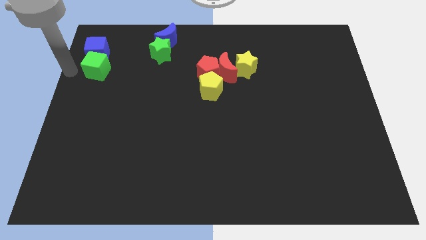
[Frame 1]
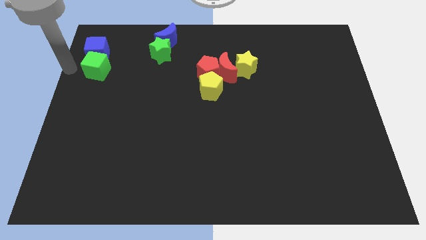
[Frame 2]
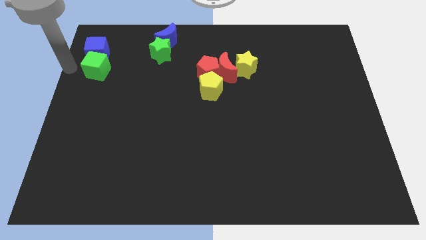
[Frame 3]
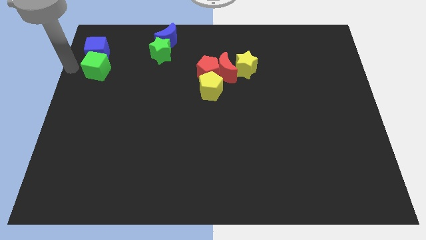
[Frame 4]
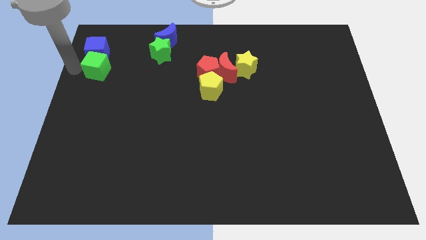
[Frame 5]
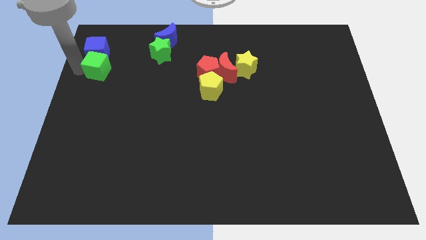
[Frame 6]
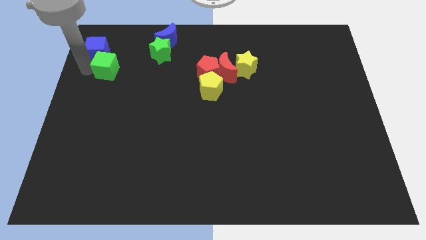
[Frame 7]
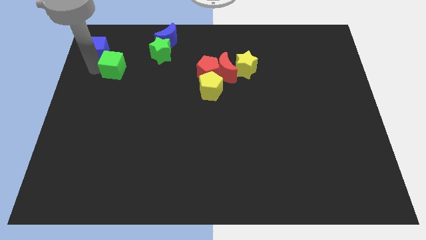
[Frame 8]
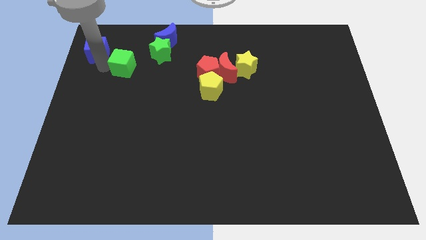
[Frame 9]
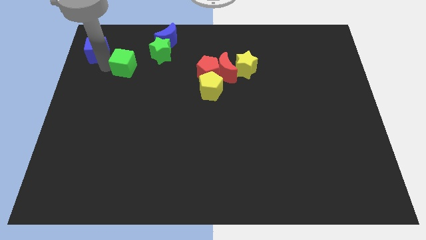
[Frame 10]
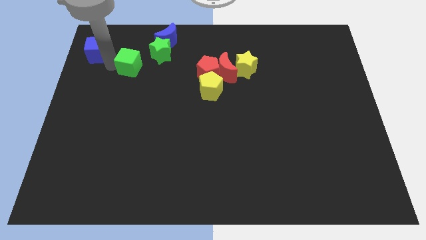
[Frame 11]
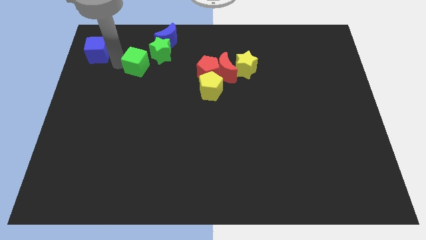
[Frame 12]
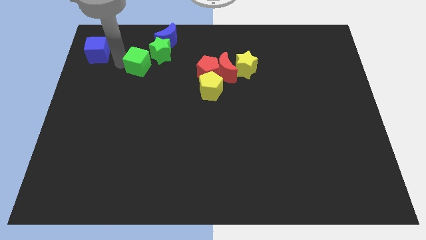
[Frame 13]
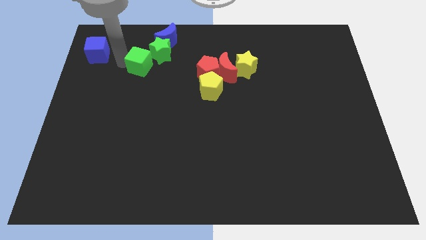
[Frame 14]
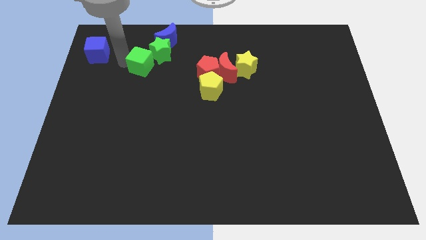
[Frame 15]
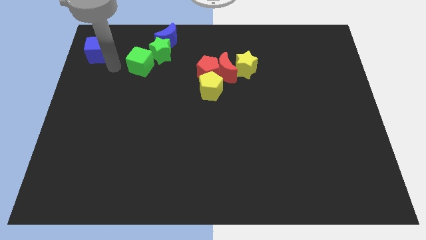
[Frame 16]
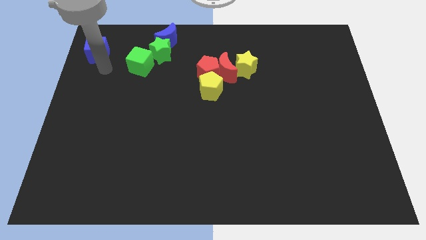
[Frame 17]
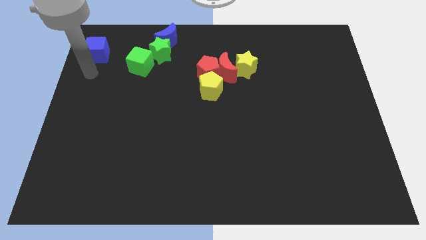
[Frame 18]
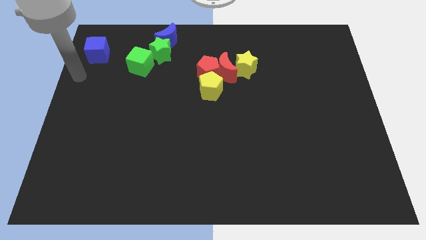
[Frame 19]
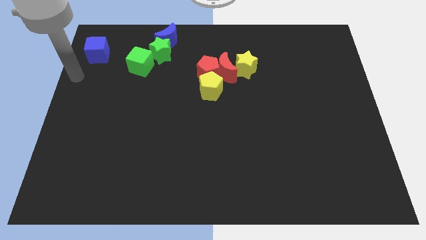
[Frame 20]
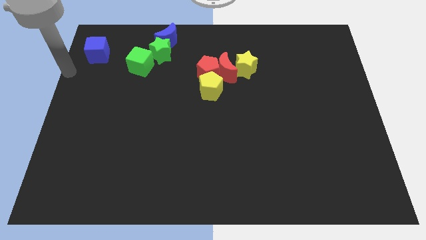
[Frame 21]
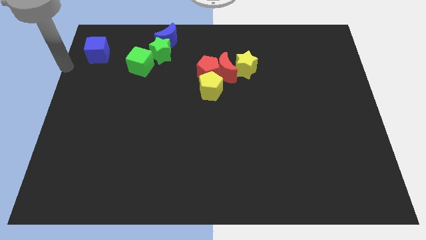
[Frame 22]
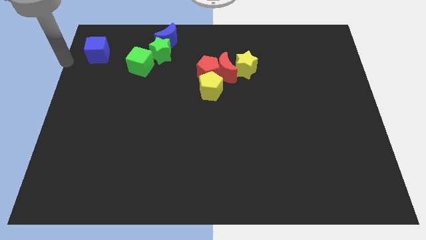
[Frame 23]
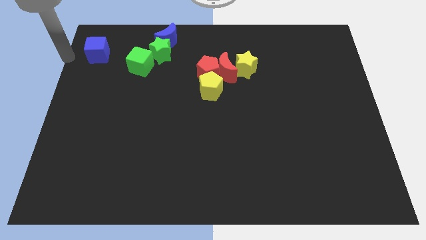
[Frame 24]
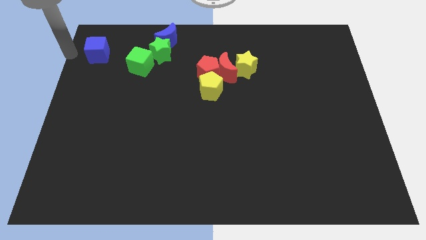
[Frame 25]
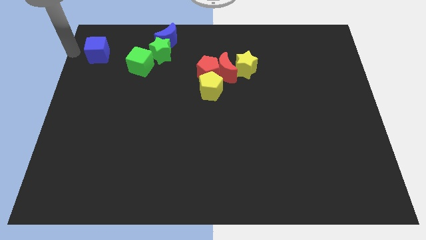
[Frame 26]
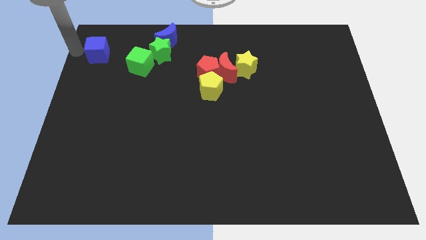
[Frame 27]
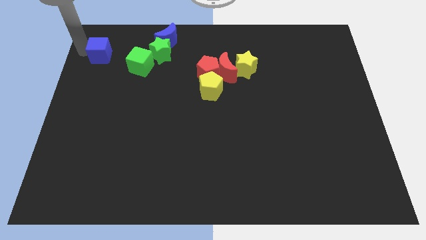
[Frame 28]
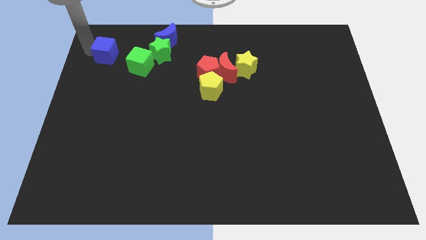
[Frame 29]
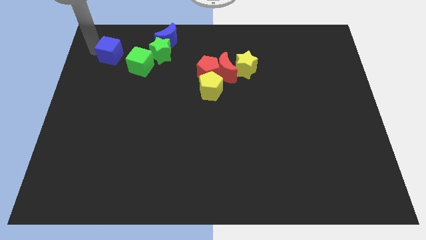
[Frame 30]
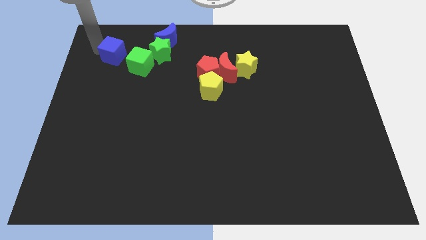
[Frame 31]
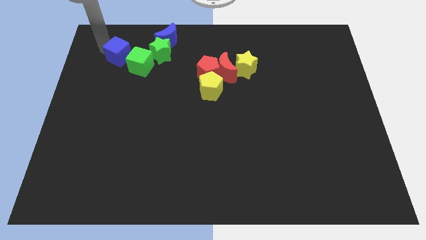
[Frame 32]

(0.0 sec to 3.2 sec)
place the green cube towards the bottom left side of the green star

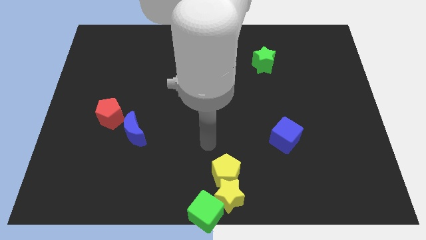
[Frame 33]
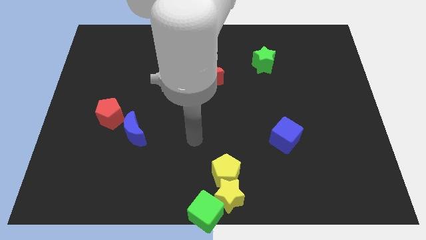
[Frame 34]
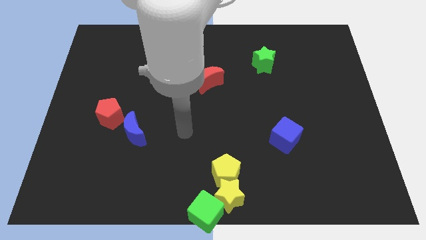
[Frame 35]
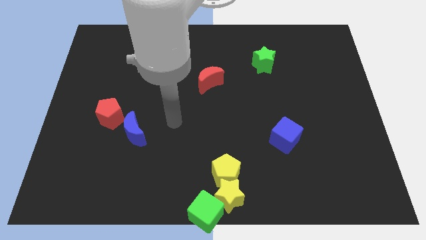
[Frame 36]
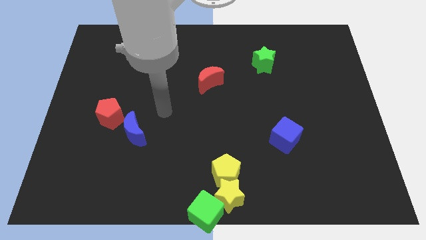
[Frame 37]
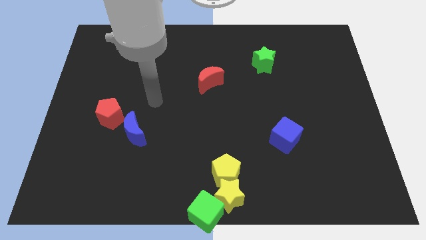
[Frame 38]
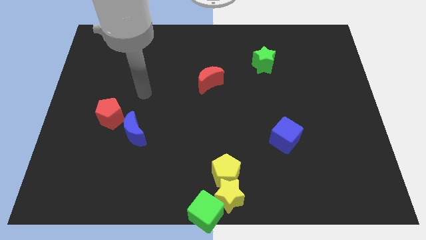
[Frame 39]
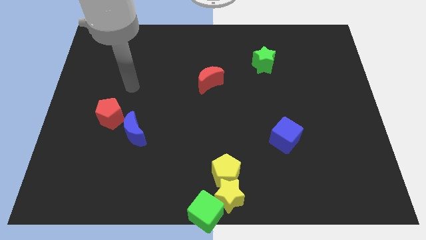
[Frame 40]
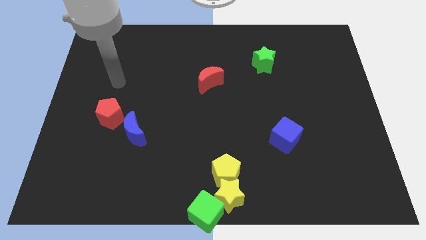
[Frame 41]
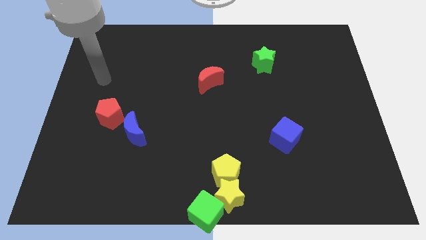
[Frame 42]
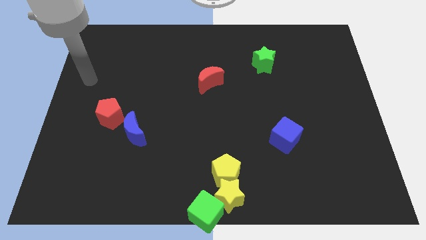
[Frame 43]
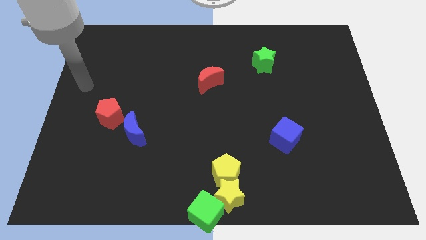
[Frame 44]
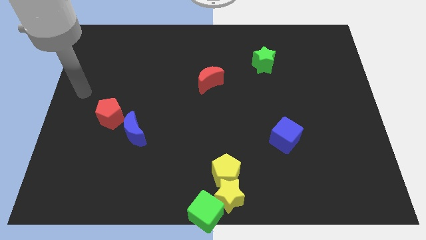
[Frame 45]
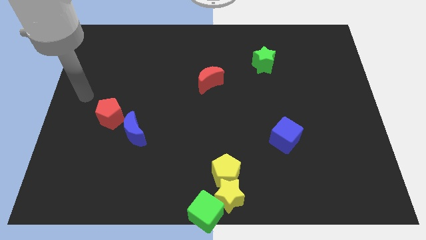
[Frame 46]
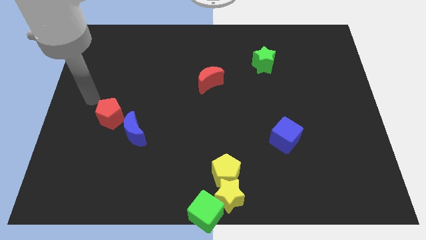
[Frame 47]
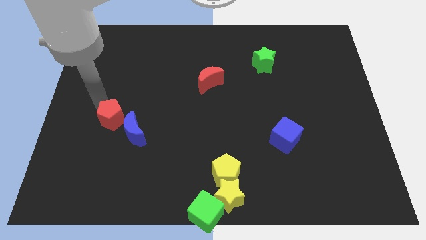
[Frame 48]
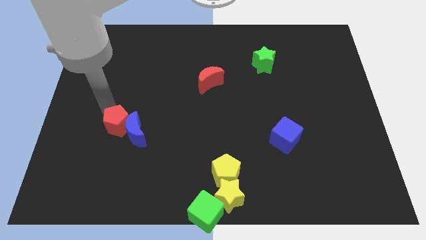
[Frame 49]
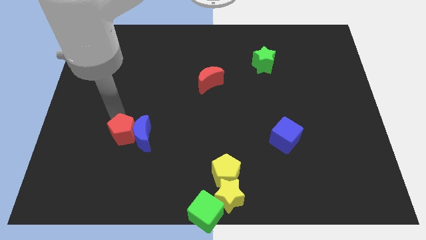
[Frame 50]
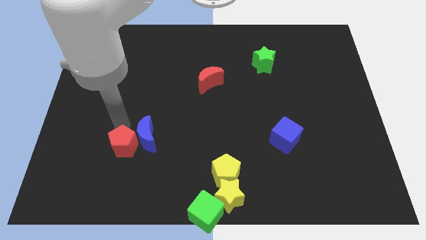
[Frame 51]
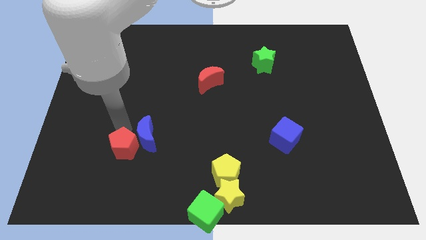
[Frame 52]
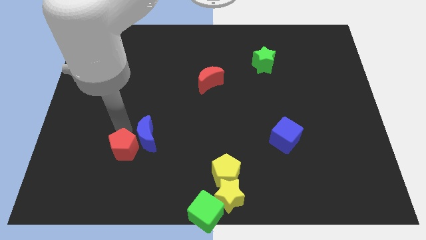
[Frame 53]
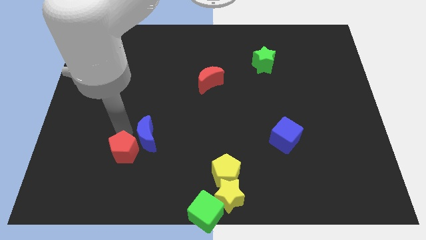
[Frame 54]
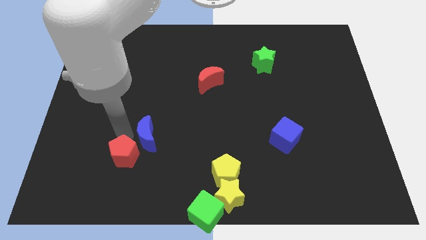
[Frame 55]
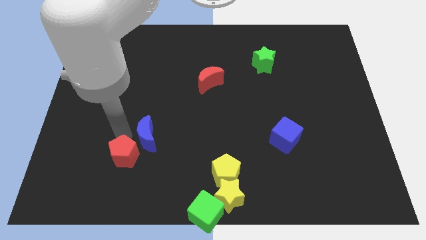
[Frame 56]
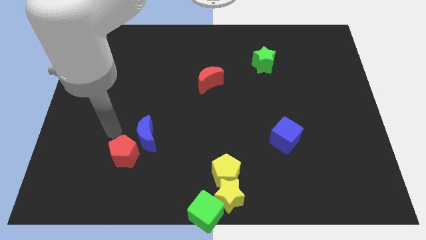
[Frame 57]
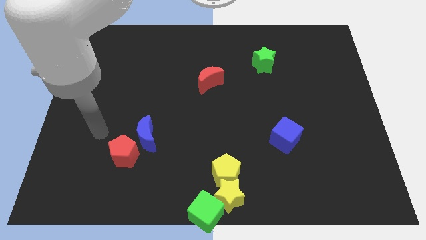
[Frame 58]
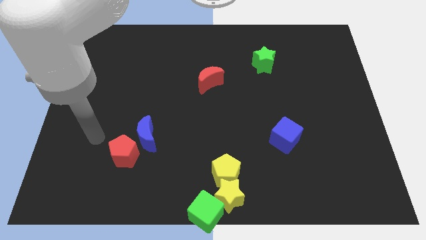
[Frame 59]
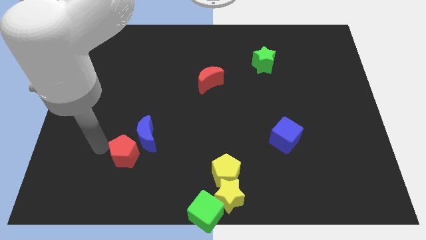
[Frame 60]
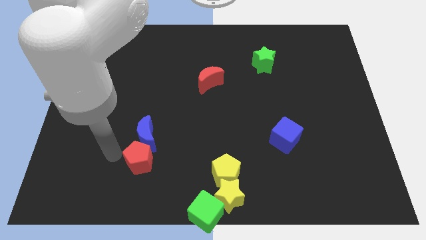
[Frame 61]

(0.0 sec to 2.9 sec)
place red pentagon to the bottom of the blue moon

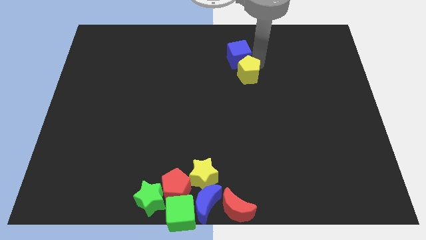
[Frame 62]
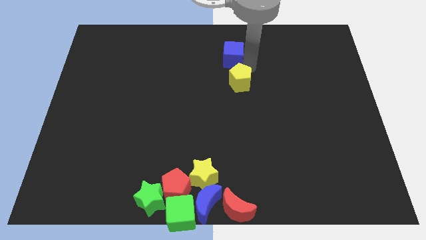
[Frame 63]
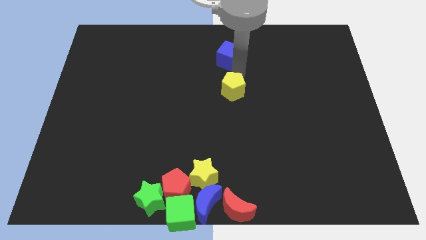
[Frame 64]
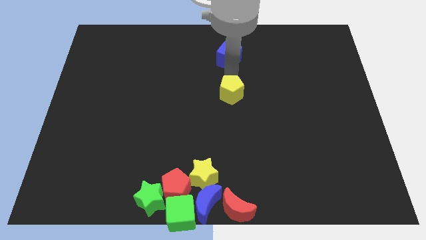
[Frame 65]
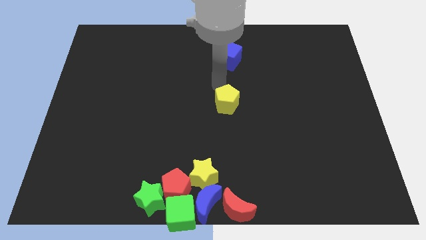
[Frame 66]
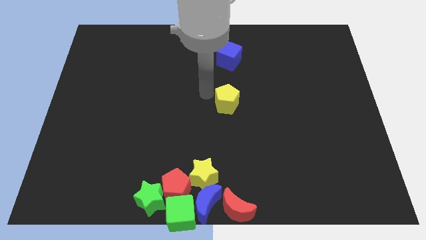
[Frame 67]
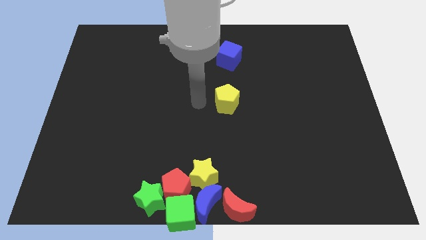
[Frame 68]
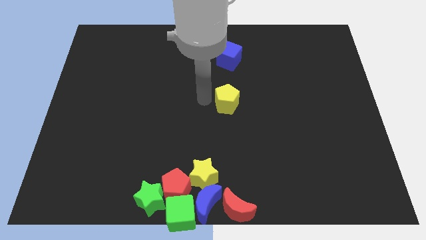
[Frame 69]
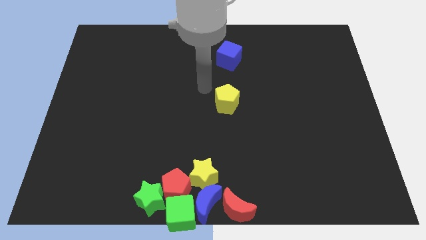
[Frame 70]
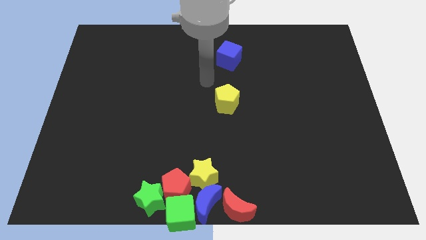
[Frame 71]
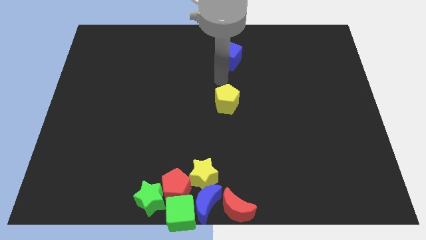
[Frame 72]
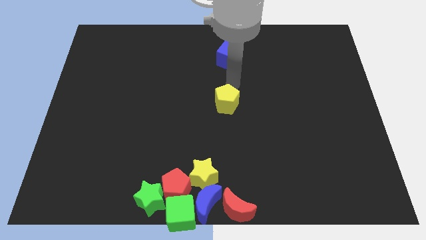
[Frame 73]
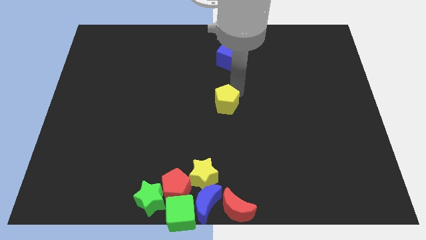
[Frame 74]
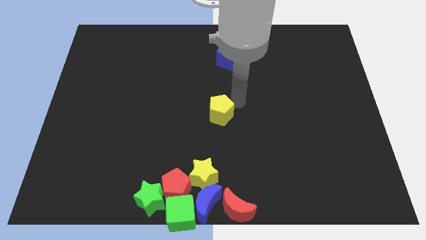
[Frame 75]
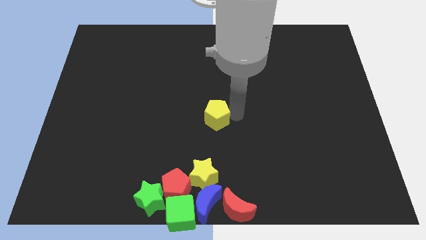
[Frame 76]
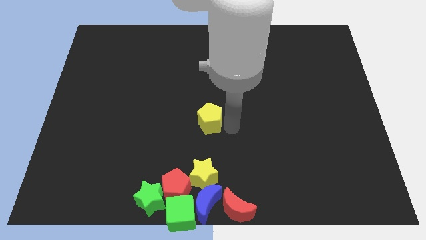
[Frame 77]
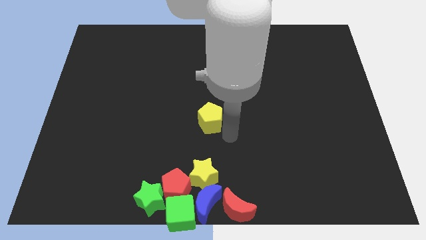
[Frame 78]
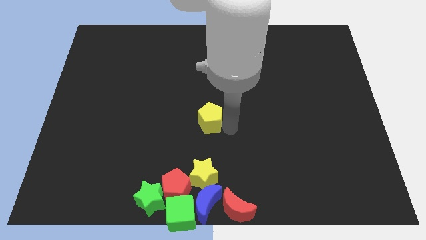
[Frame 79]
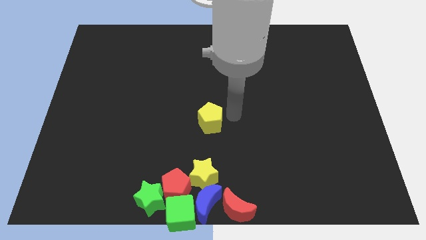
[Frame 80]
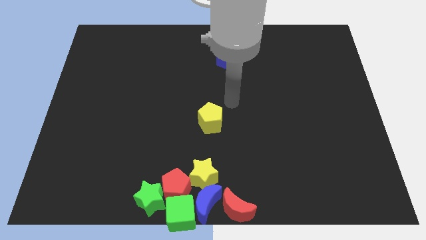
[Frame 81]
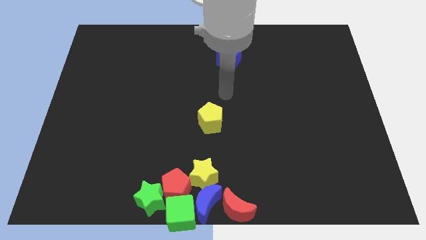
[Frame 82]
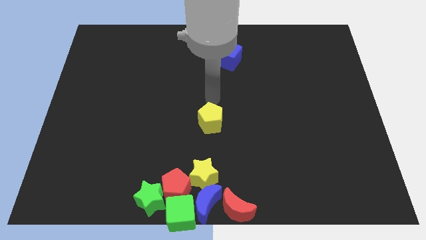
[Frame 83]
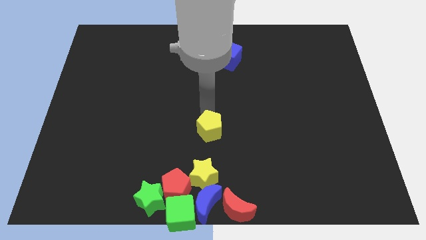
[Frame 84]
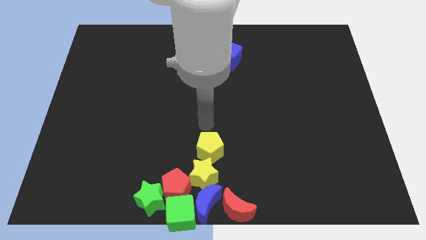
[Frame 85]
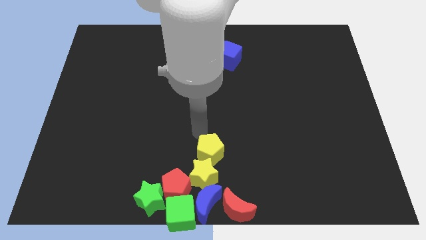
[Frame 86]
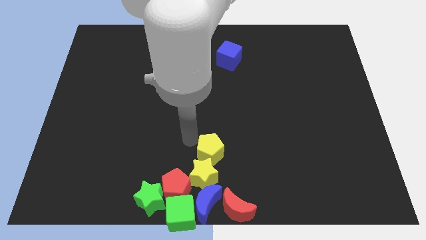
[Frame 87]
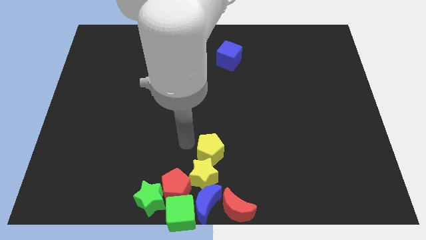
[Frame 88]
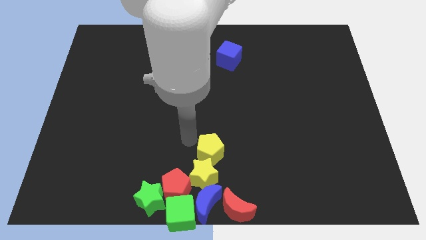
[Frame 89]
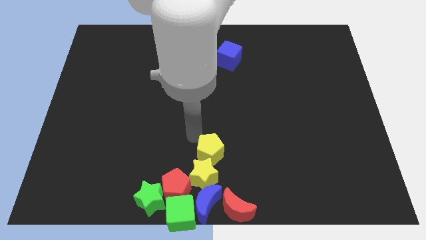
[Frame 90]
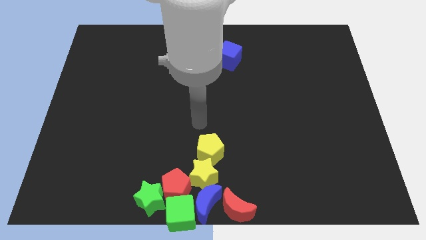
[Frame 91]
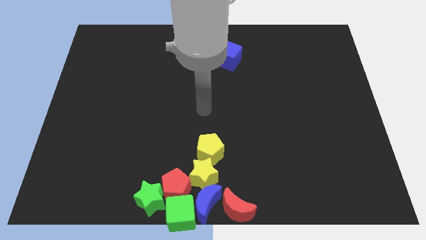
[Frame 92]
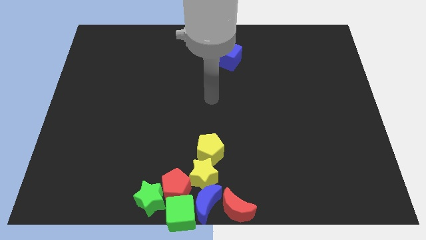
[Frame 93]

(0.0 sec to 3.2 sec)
push the yellow pentagon into the yellow star
